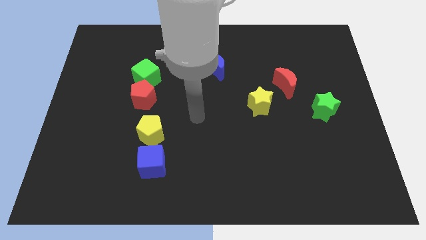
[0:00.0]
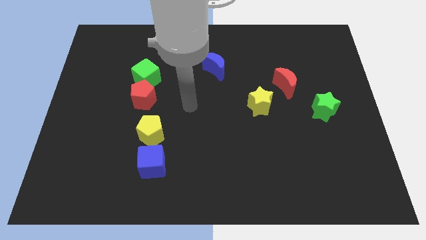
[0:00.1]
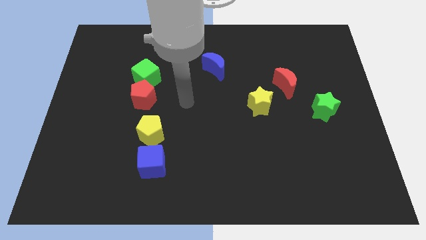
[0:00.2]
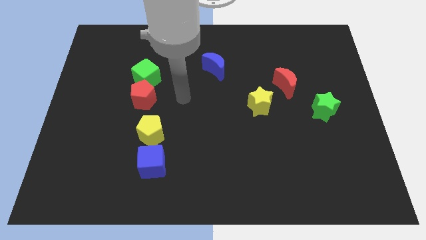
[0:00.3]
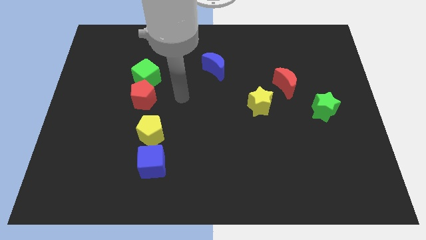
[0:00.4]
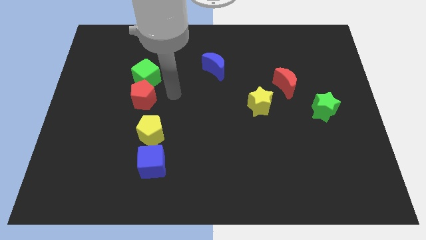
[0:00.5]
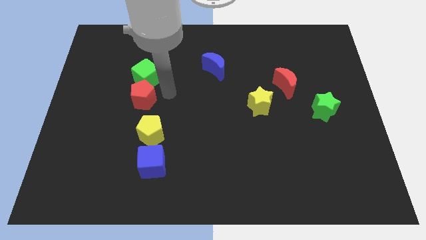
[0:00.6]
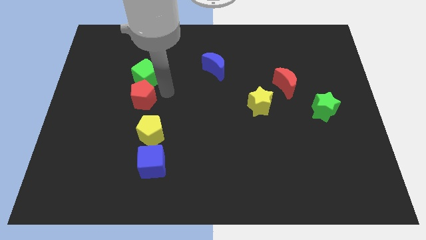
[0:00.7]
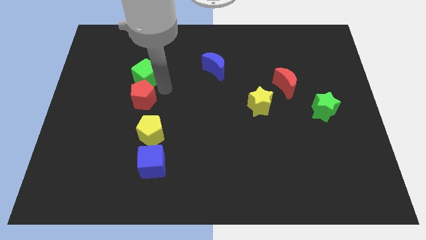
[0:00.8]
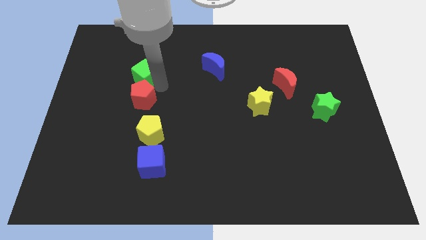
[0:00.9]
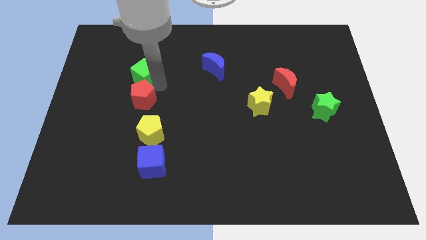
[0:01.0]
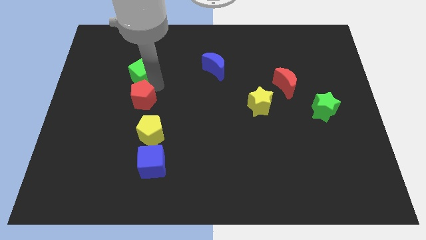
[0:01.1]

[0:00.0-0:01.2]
move your arm to the green cube

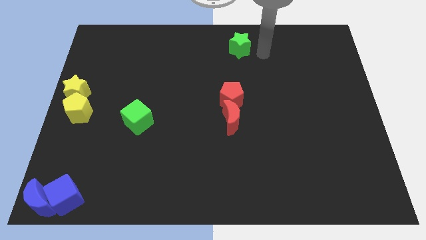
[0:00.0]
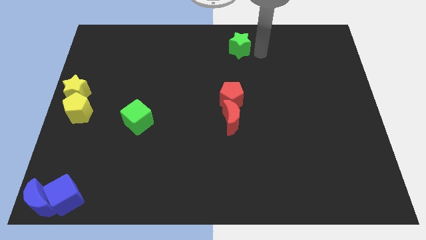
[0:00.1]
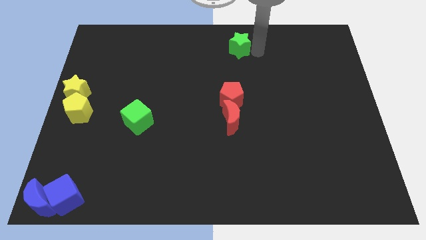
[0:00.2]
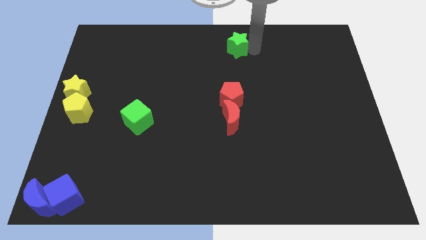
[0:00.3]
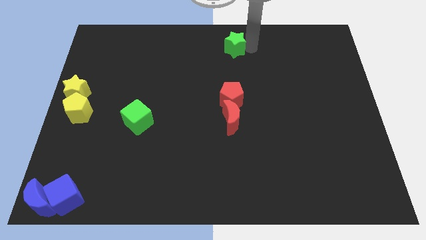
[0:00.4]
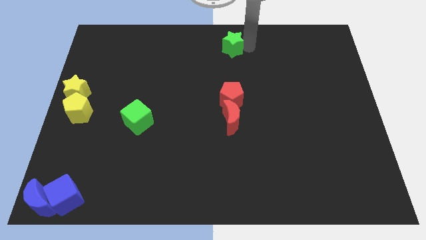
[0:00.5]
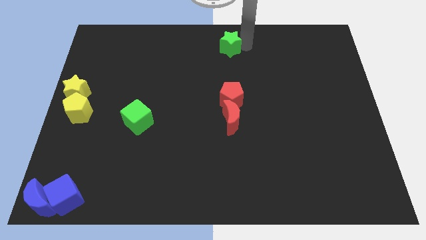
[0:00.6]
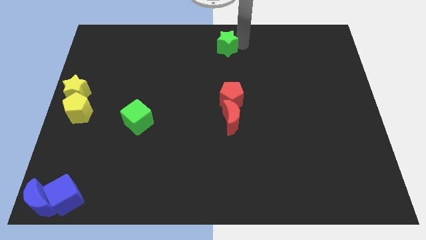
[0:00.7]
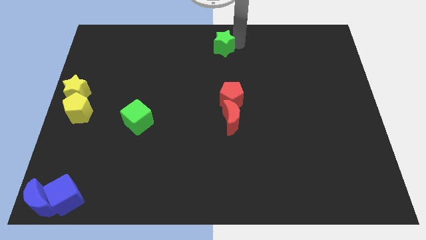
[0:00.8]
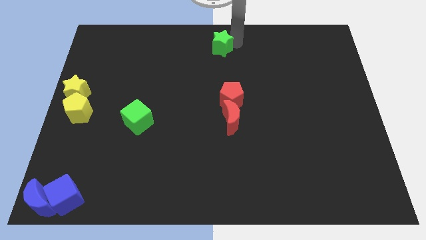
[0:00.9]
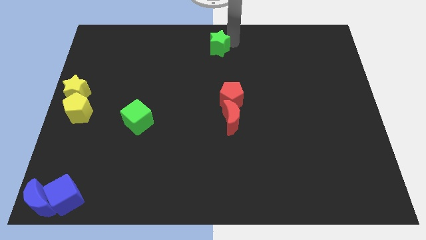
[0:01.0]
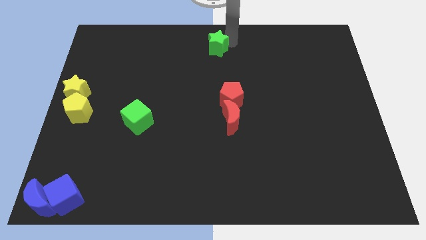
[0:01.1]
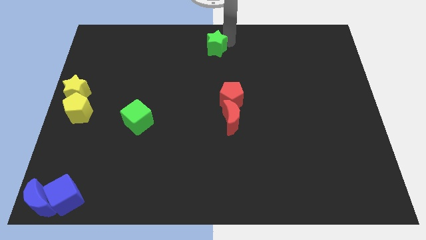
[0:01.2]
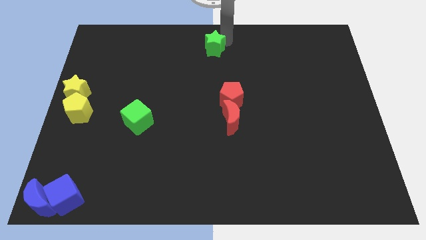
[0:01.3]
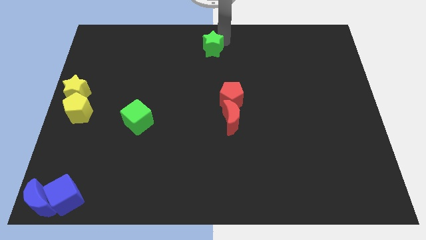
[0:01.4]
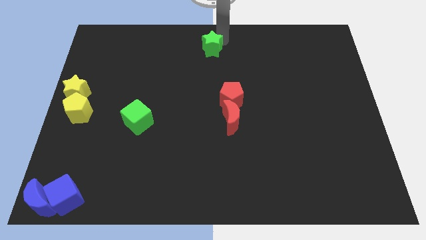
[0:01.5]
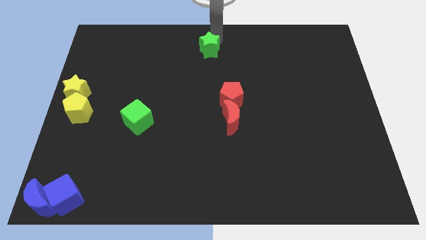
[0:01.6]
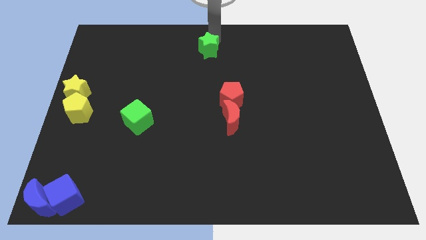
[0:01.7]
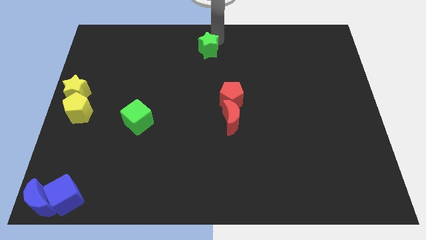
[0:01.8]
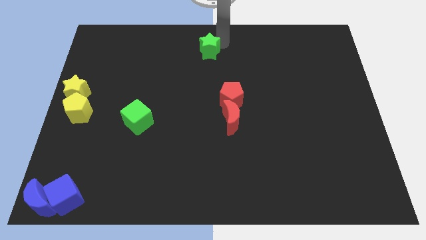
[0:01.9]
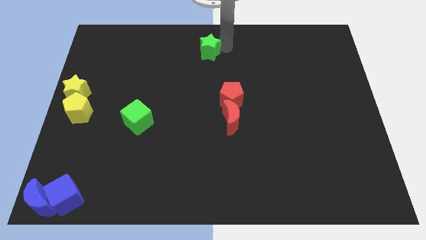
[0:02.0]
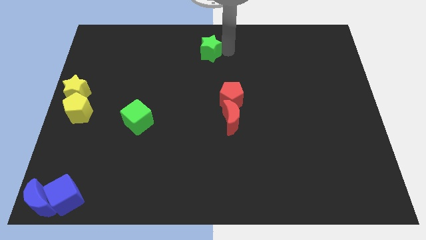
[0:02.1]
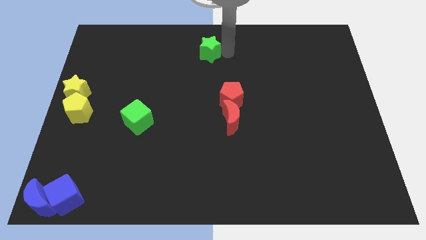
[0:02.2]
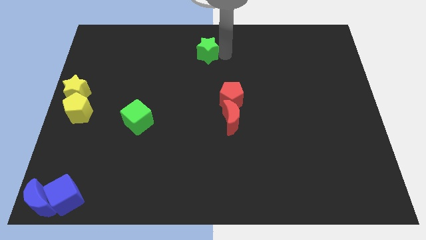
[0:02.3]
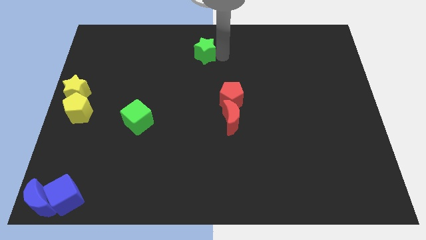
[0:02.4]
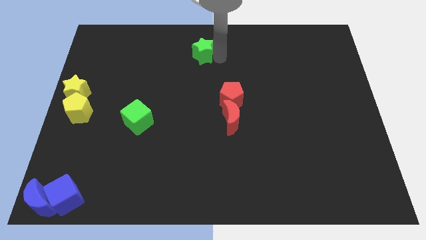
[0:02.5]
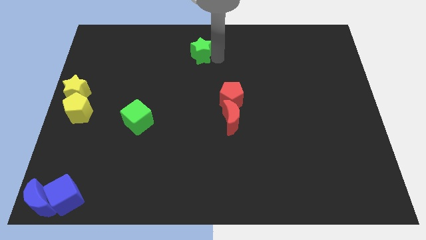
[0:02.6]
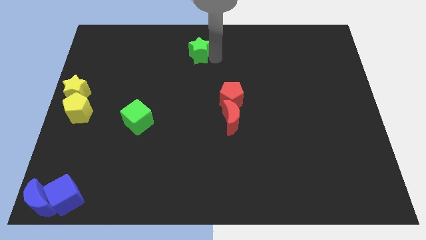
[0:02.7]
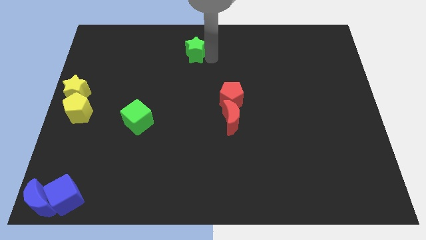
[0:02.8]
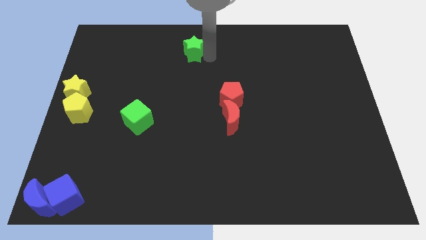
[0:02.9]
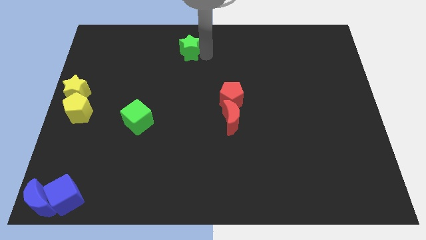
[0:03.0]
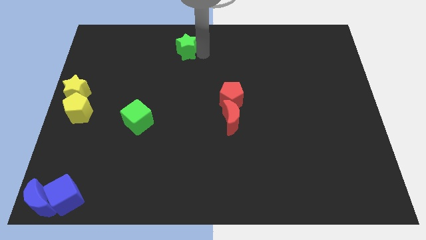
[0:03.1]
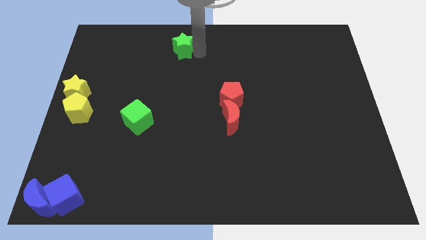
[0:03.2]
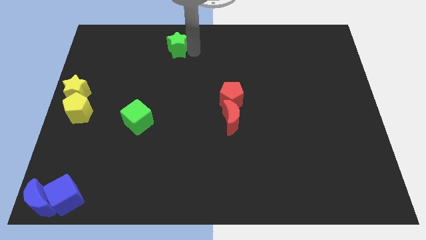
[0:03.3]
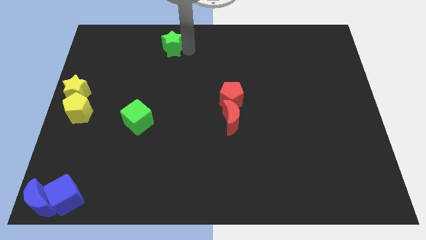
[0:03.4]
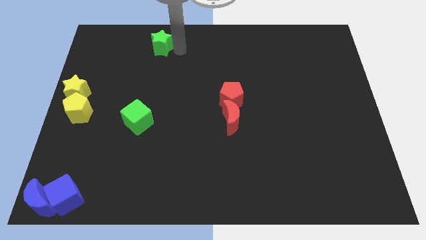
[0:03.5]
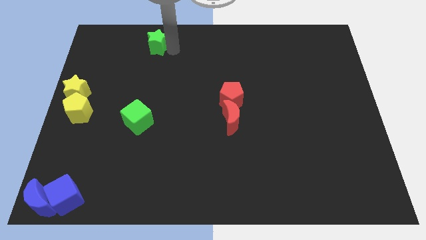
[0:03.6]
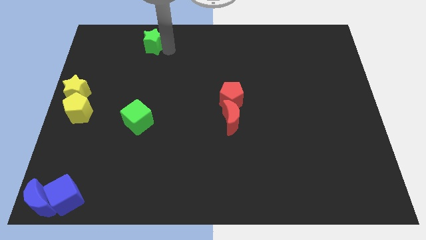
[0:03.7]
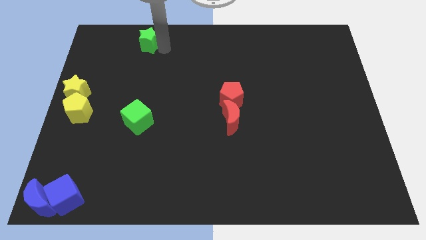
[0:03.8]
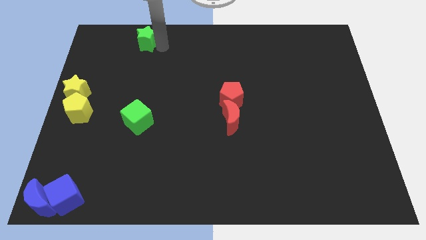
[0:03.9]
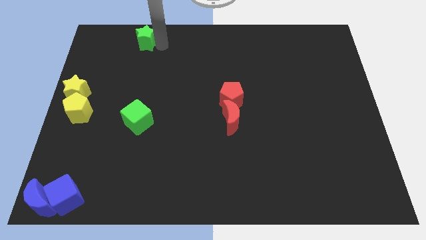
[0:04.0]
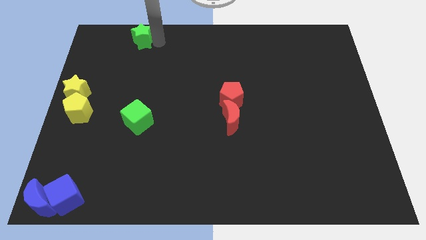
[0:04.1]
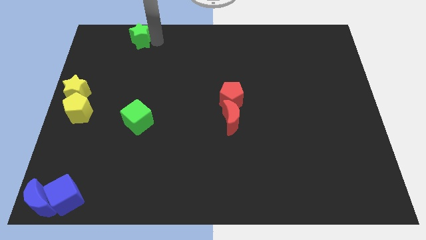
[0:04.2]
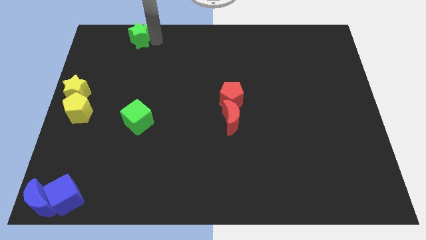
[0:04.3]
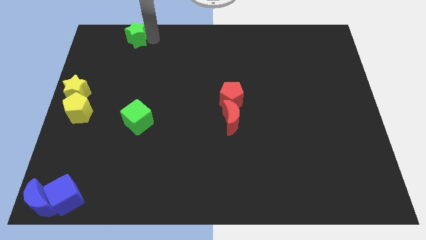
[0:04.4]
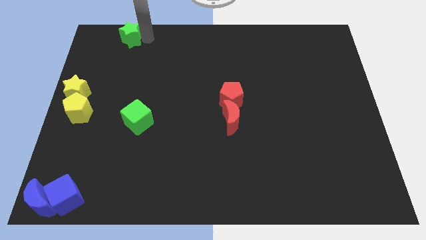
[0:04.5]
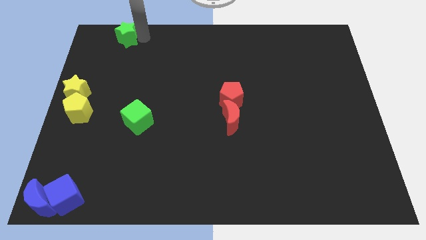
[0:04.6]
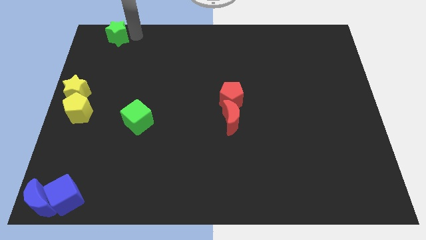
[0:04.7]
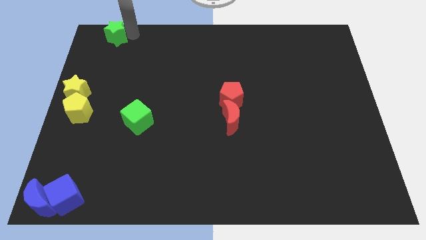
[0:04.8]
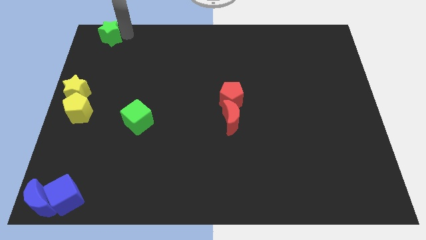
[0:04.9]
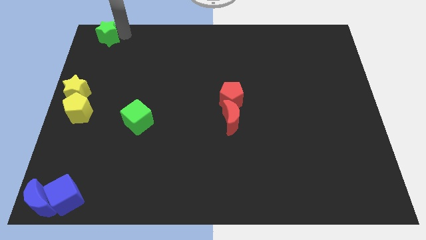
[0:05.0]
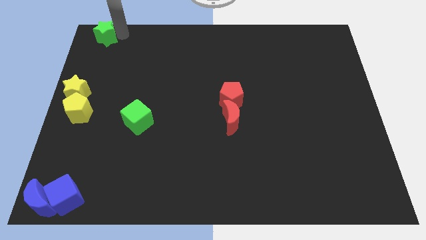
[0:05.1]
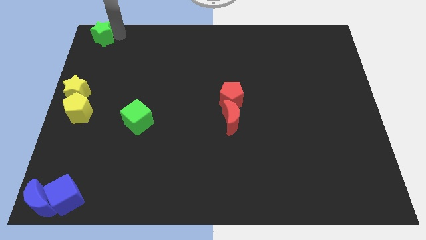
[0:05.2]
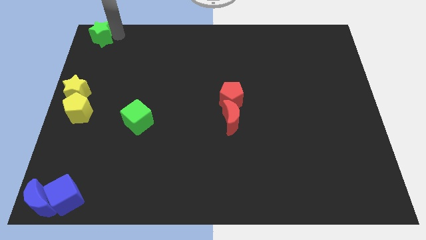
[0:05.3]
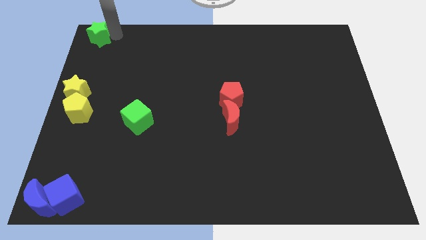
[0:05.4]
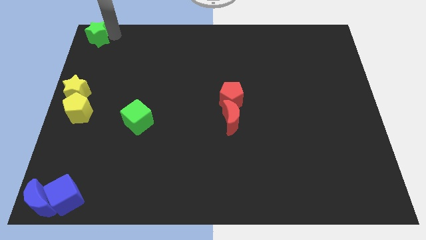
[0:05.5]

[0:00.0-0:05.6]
push the green star to the top left corner of the board

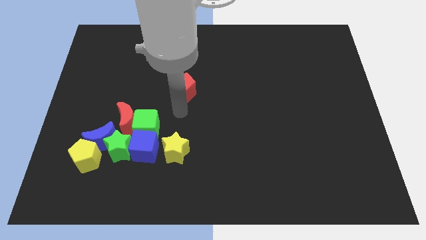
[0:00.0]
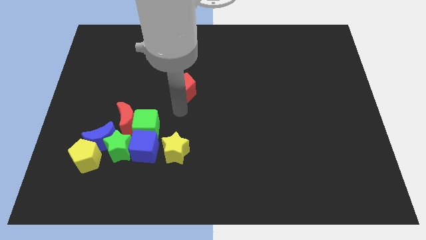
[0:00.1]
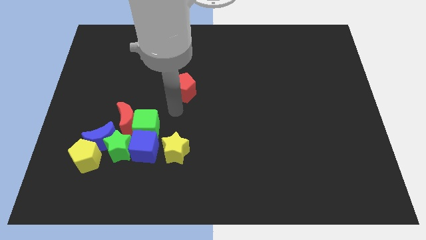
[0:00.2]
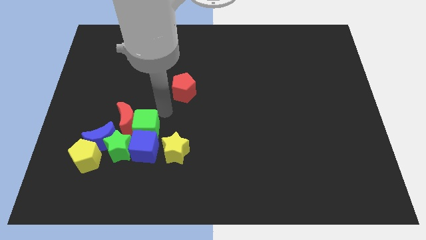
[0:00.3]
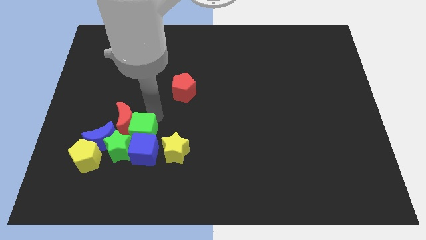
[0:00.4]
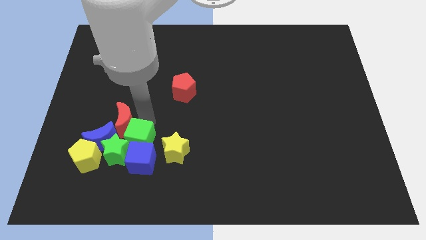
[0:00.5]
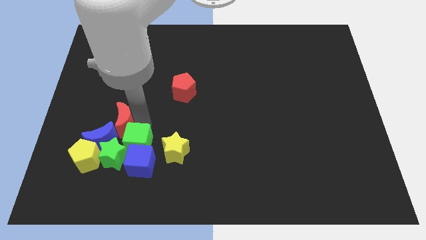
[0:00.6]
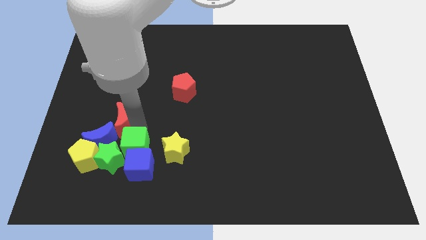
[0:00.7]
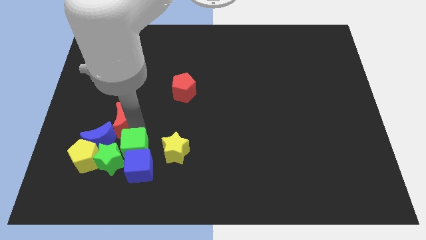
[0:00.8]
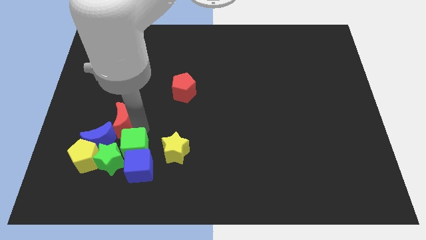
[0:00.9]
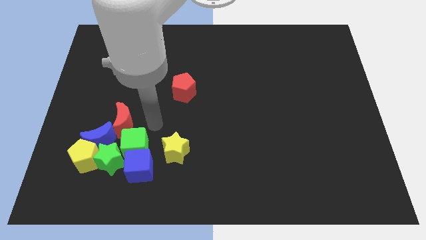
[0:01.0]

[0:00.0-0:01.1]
adjust the group of blocks in between the yellow star and yellow pentagon

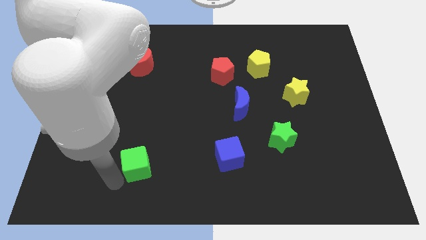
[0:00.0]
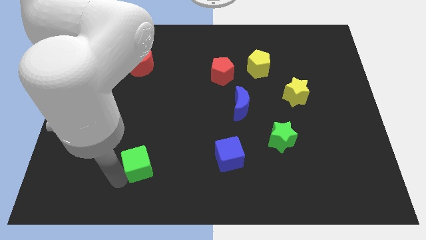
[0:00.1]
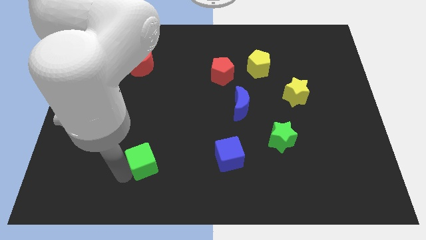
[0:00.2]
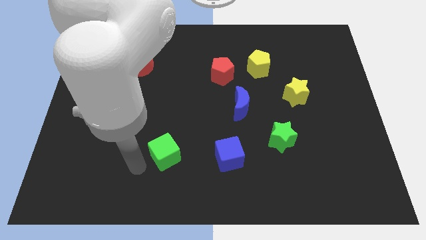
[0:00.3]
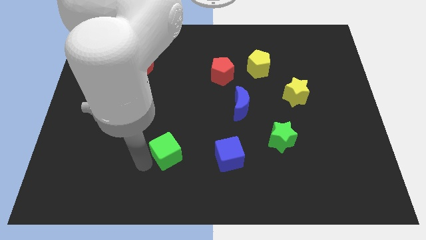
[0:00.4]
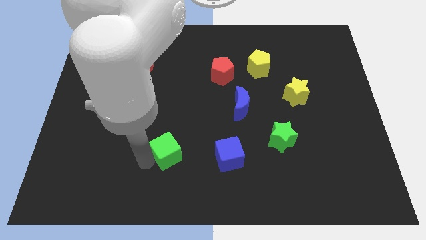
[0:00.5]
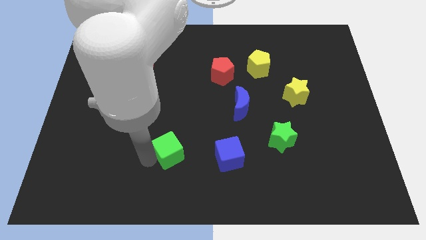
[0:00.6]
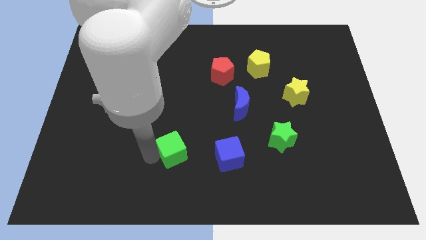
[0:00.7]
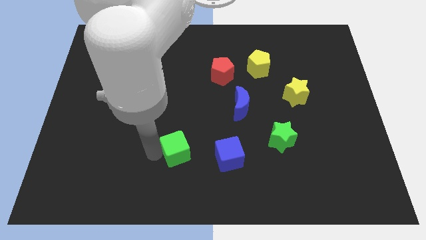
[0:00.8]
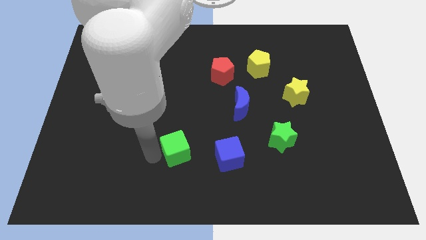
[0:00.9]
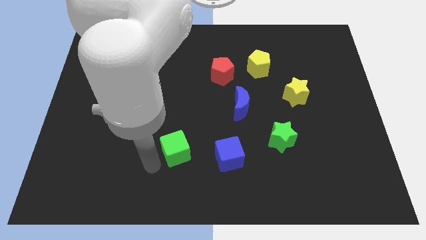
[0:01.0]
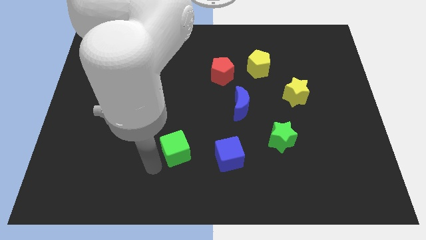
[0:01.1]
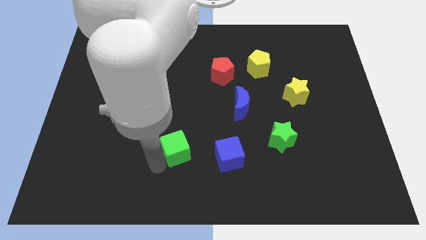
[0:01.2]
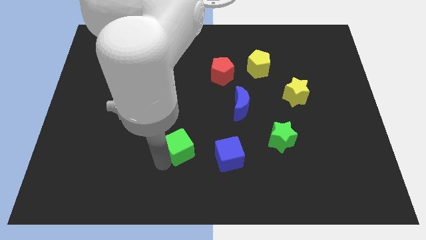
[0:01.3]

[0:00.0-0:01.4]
place the green cube on the left side of the blue cube on the board
